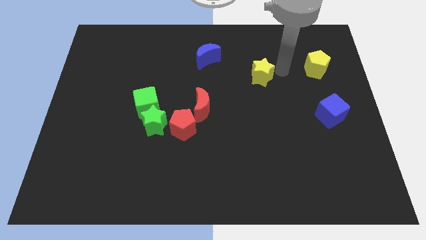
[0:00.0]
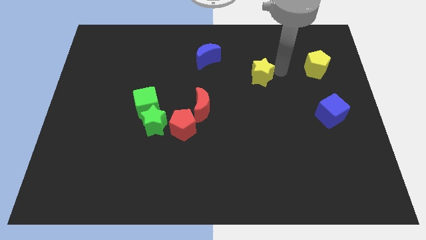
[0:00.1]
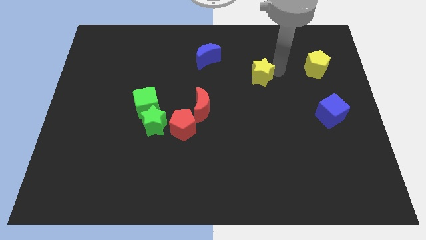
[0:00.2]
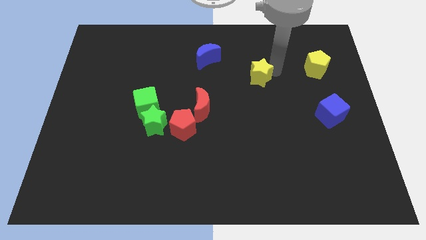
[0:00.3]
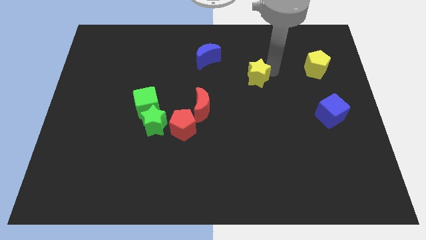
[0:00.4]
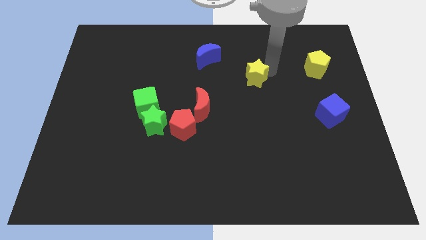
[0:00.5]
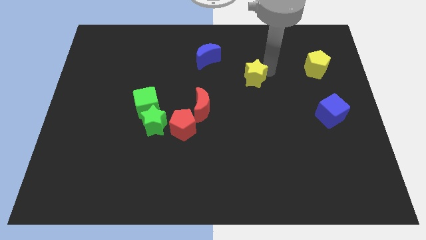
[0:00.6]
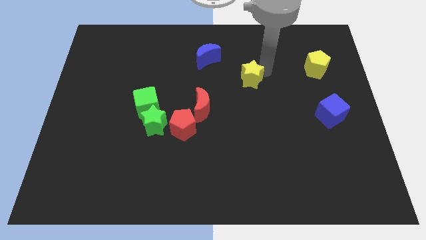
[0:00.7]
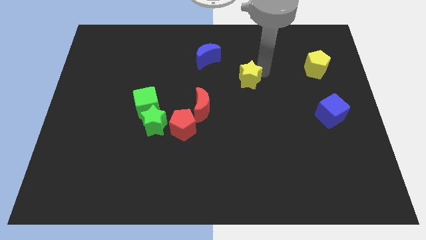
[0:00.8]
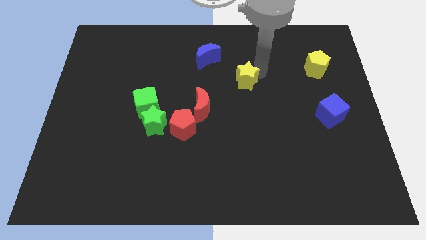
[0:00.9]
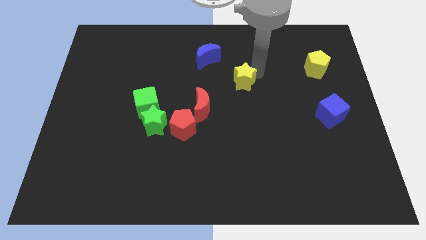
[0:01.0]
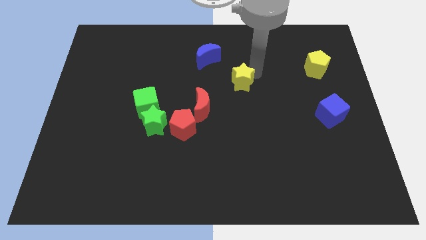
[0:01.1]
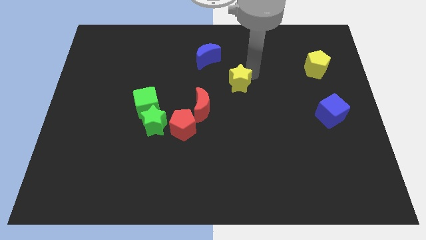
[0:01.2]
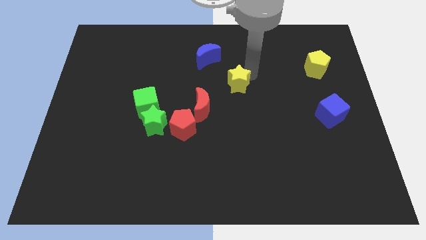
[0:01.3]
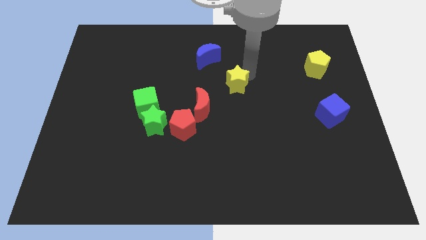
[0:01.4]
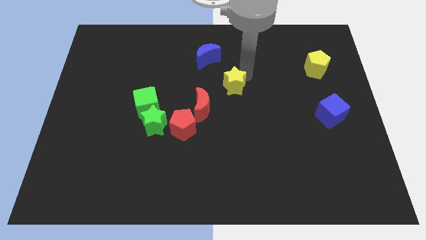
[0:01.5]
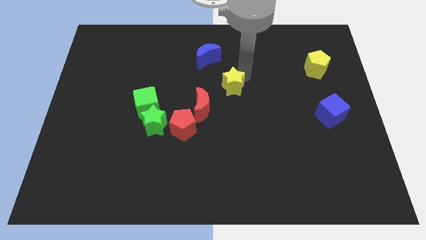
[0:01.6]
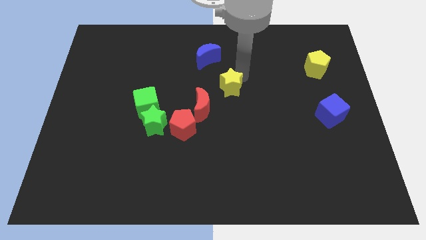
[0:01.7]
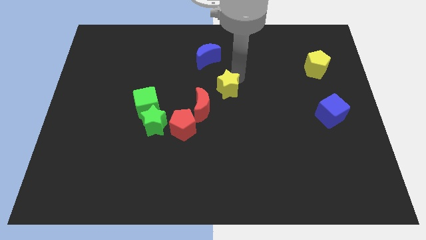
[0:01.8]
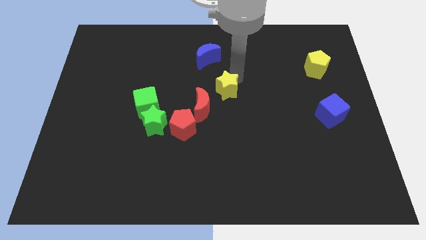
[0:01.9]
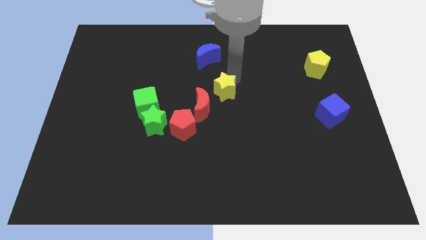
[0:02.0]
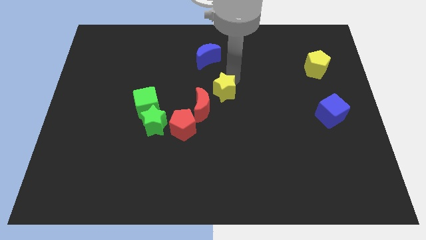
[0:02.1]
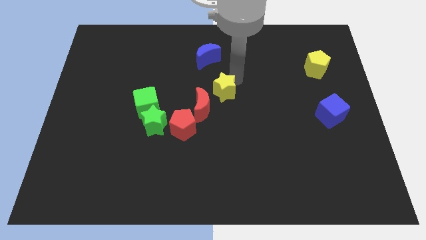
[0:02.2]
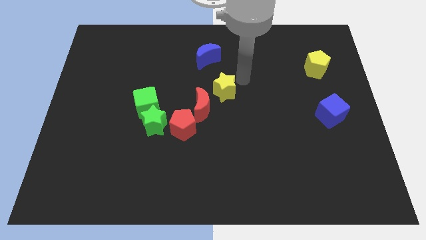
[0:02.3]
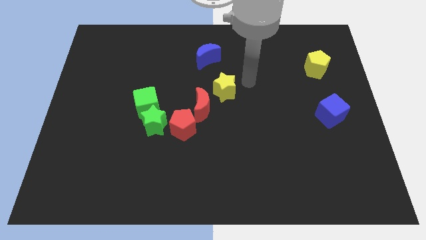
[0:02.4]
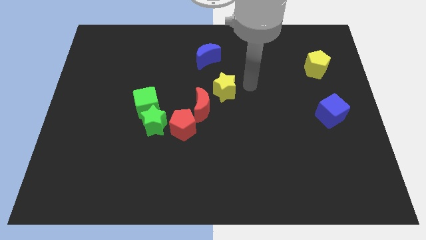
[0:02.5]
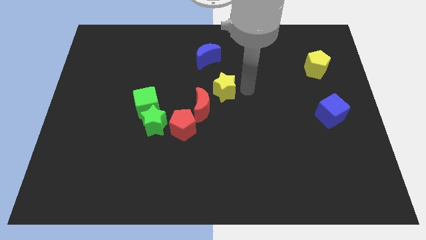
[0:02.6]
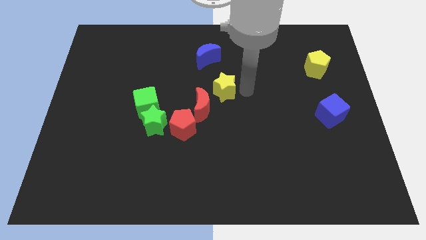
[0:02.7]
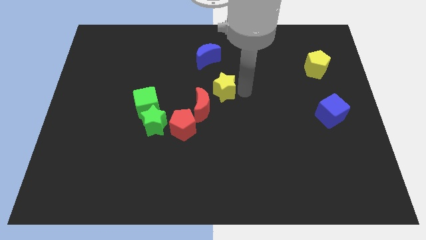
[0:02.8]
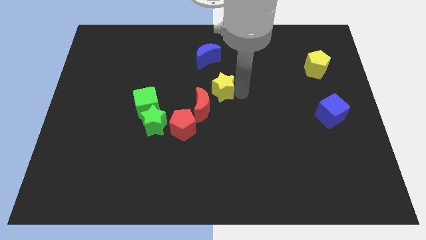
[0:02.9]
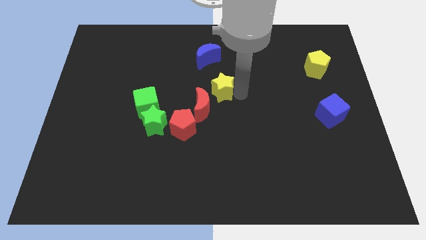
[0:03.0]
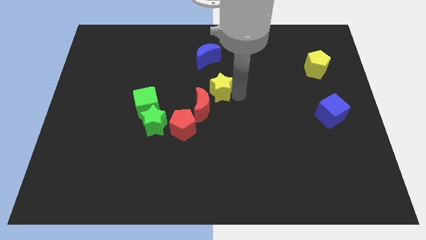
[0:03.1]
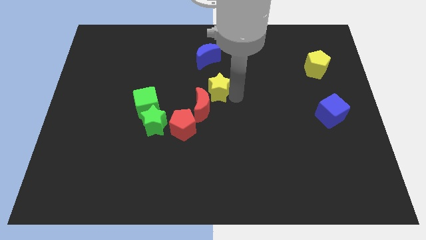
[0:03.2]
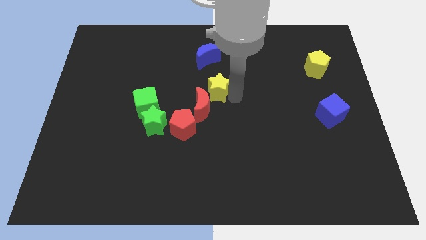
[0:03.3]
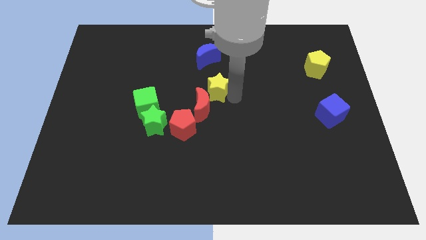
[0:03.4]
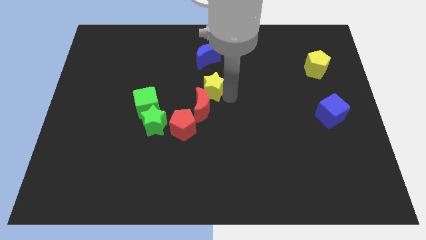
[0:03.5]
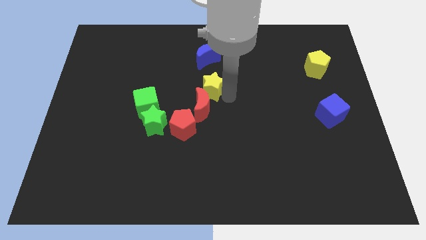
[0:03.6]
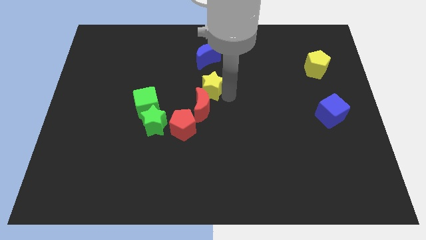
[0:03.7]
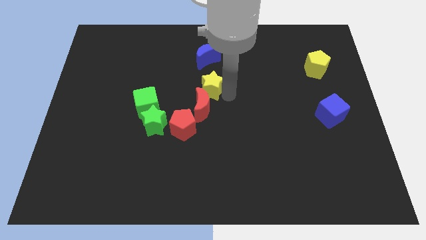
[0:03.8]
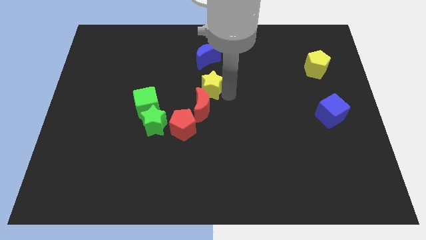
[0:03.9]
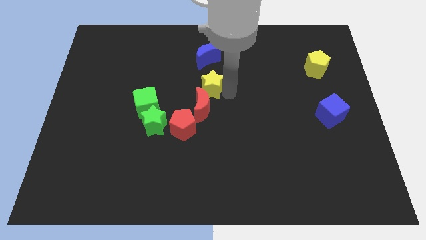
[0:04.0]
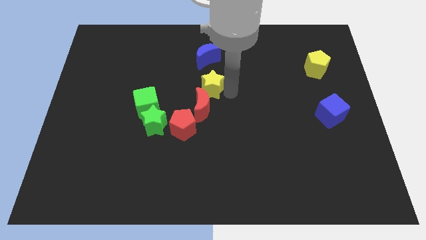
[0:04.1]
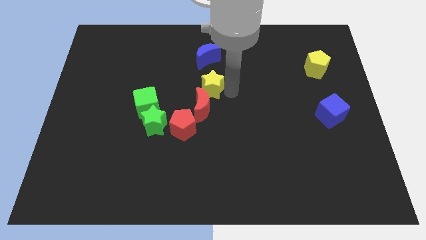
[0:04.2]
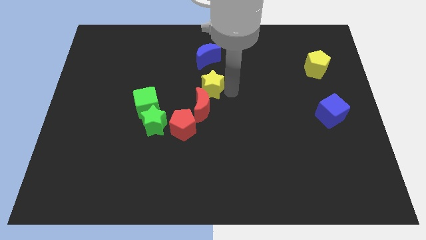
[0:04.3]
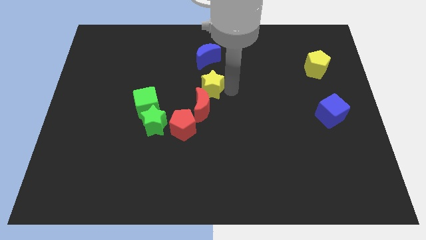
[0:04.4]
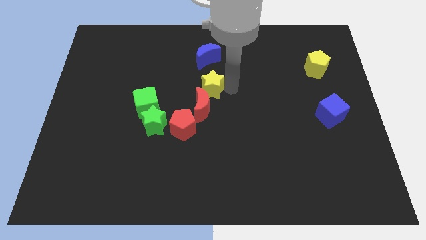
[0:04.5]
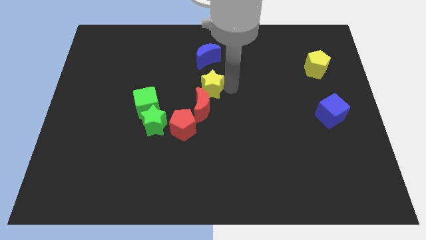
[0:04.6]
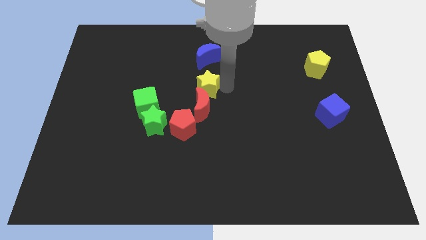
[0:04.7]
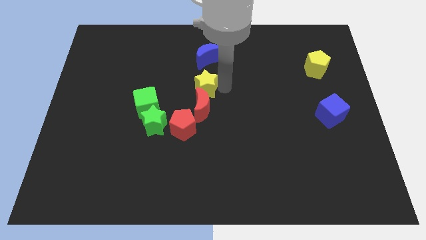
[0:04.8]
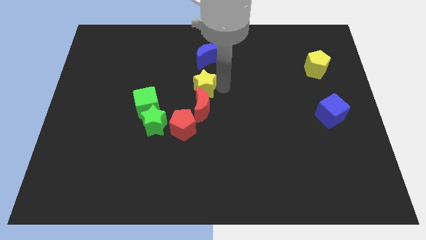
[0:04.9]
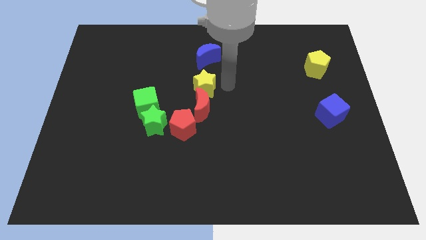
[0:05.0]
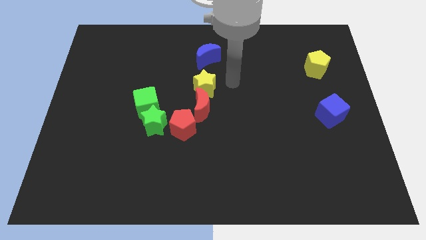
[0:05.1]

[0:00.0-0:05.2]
move the yellow star to the top of the red moon

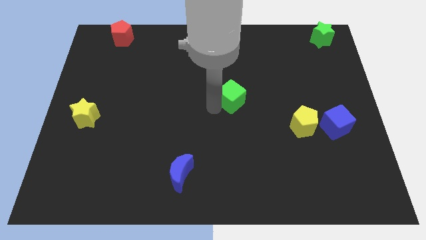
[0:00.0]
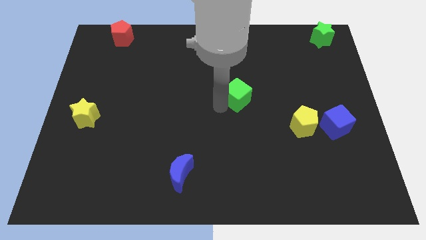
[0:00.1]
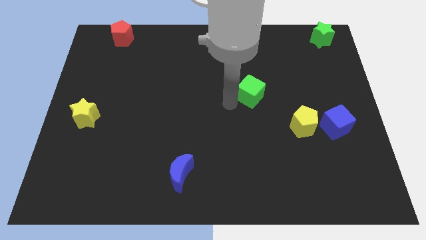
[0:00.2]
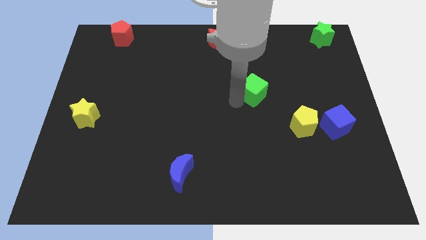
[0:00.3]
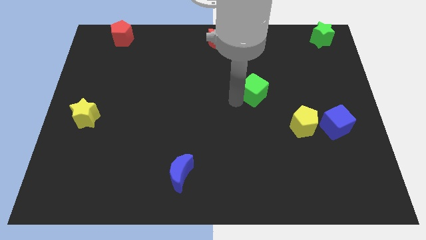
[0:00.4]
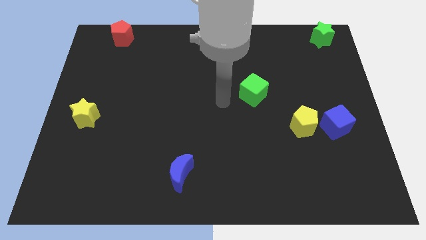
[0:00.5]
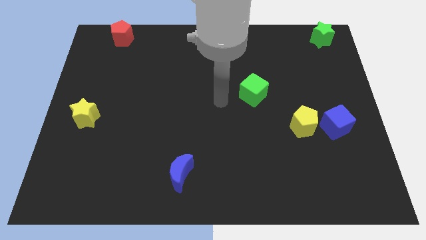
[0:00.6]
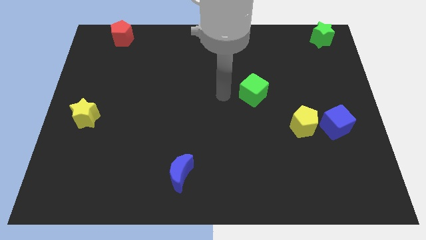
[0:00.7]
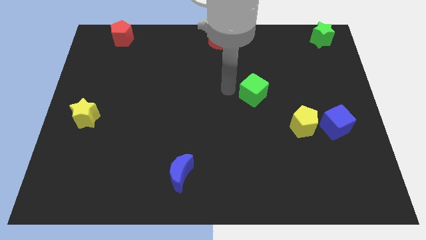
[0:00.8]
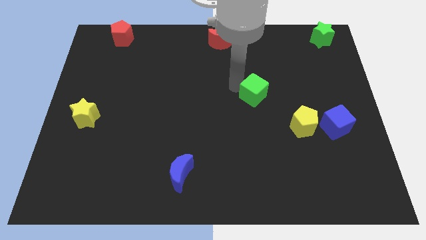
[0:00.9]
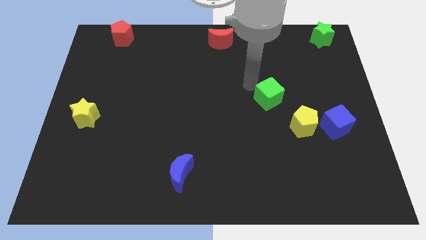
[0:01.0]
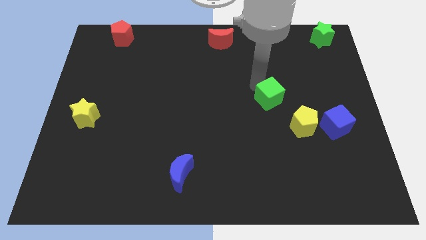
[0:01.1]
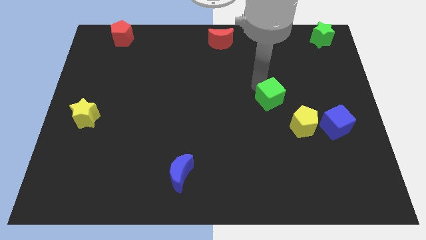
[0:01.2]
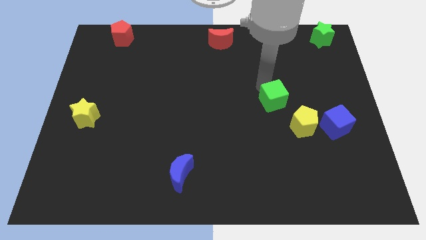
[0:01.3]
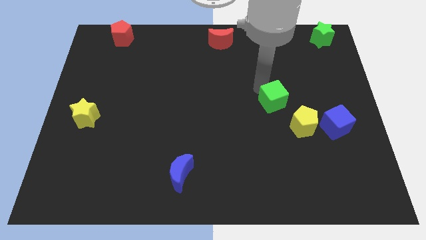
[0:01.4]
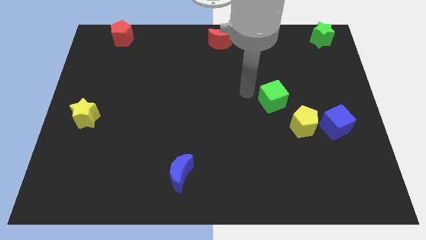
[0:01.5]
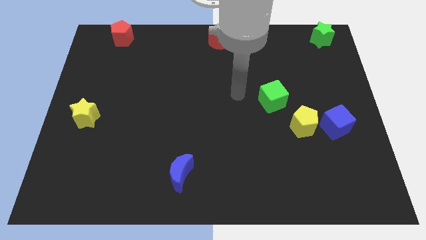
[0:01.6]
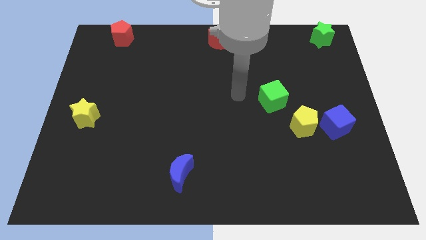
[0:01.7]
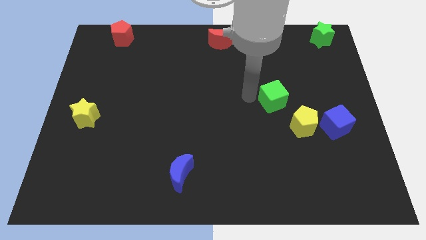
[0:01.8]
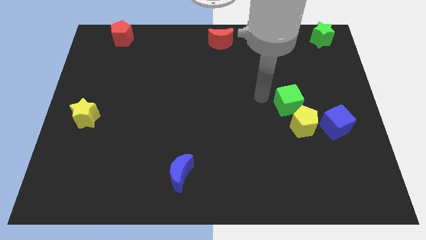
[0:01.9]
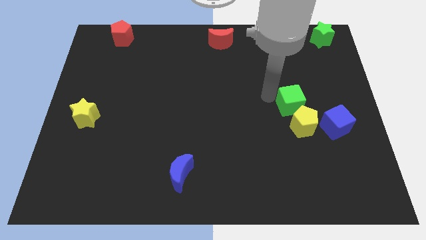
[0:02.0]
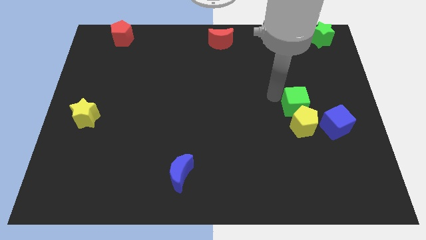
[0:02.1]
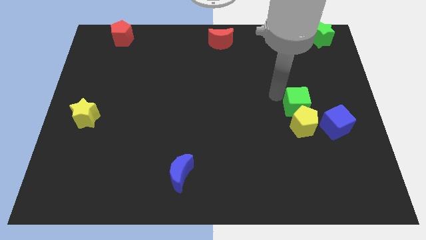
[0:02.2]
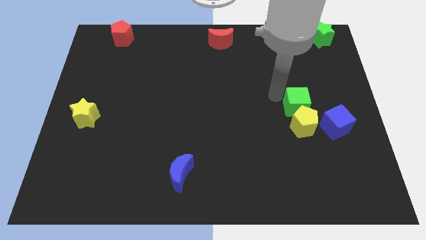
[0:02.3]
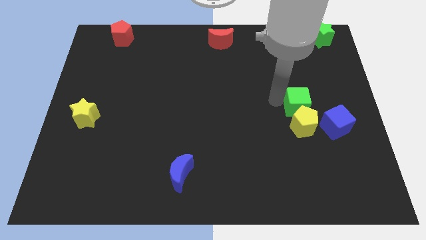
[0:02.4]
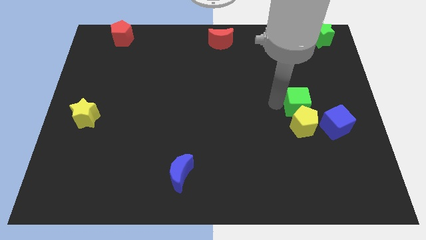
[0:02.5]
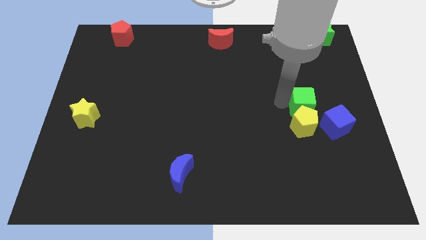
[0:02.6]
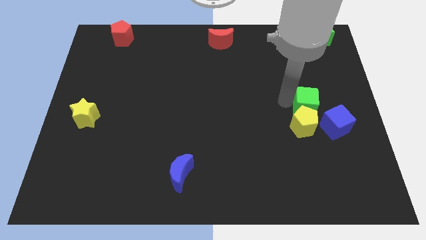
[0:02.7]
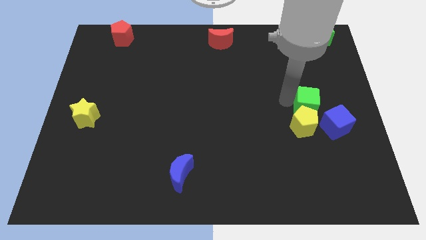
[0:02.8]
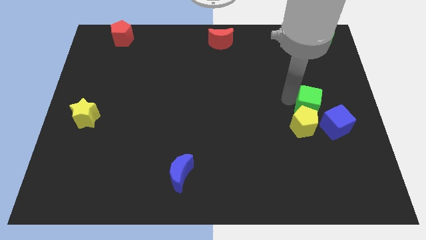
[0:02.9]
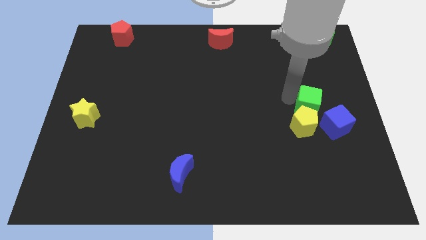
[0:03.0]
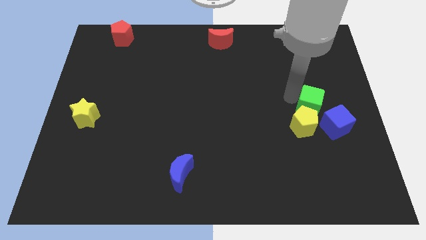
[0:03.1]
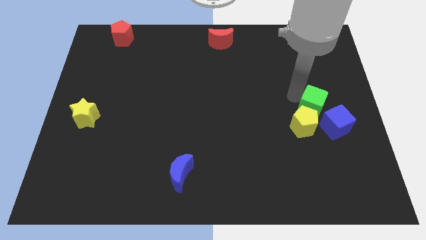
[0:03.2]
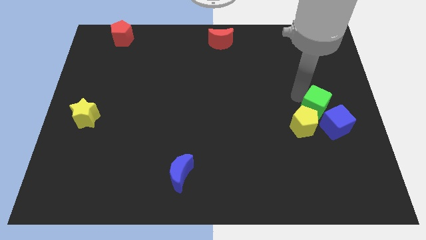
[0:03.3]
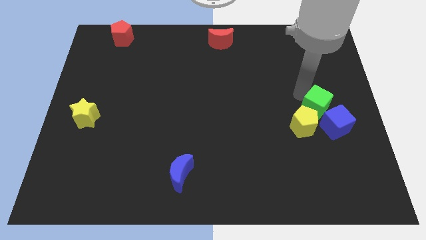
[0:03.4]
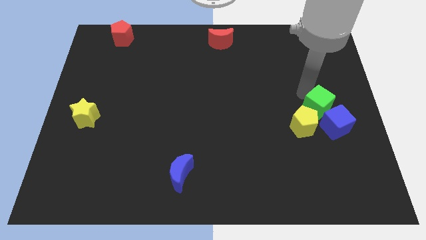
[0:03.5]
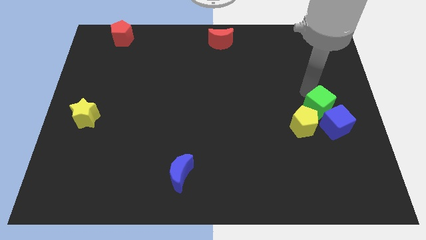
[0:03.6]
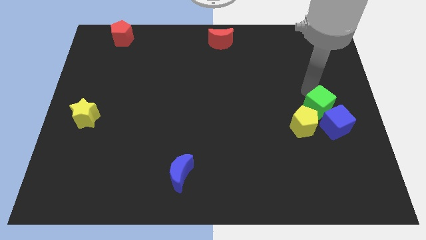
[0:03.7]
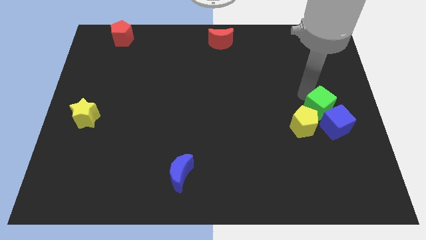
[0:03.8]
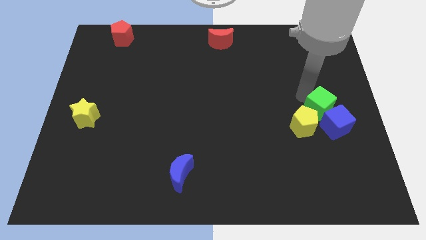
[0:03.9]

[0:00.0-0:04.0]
place the green cube above the blue cube
